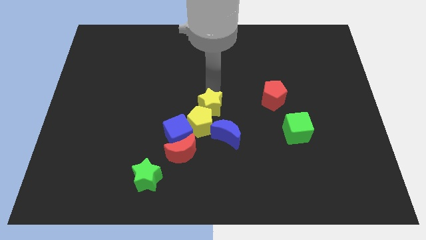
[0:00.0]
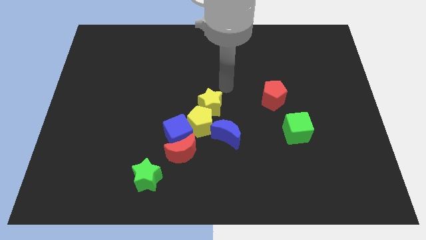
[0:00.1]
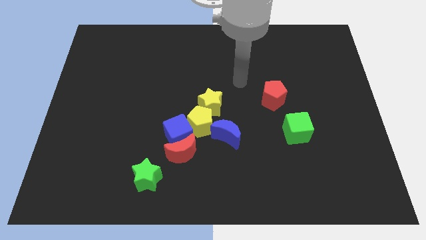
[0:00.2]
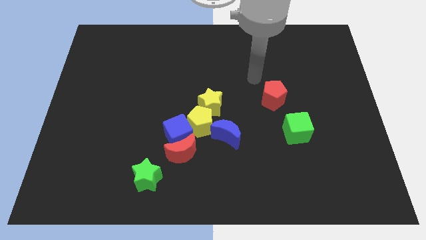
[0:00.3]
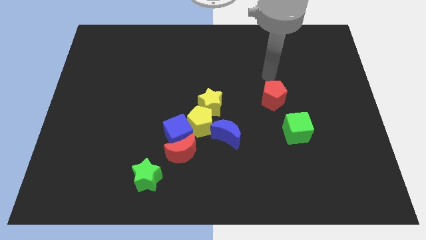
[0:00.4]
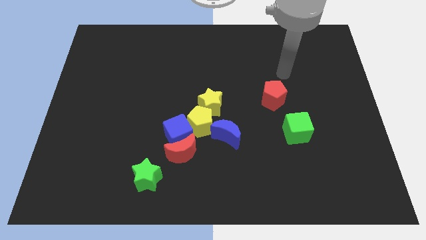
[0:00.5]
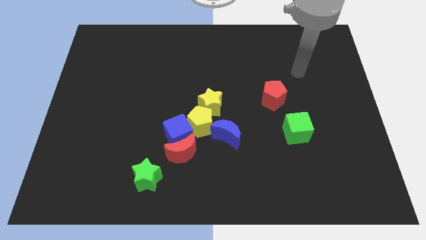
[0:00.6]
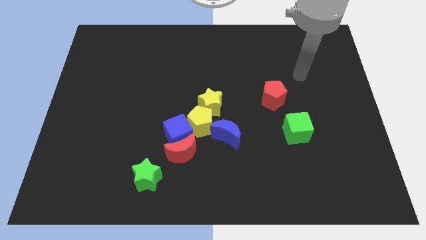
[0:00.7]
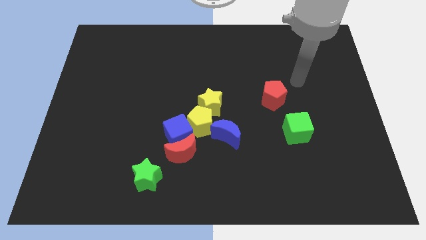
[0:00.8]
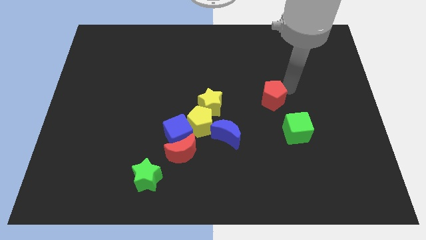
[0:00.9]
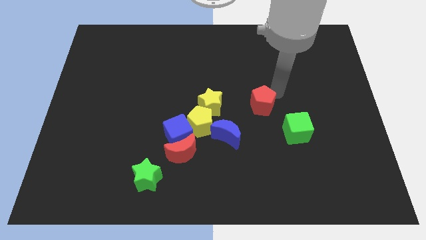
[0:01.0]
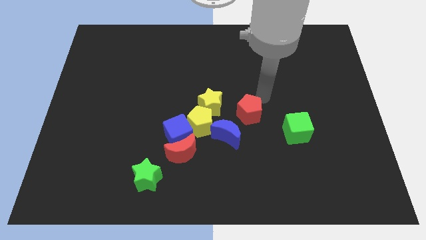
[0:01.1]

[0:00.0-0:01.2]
push red pentagon to the right of the yellow star

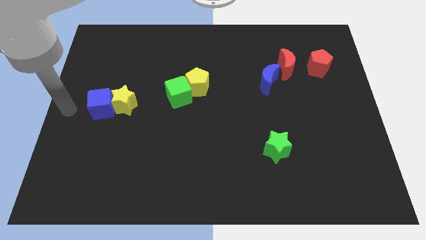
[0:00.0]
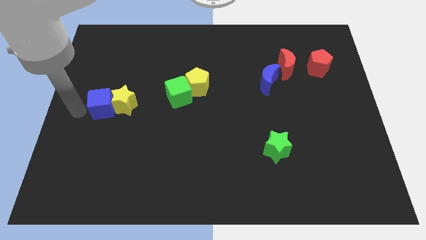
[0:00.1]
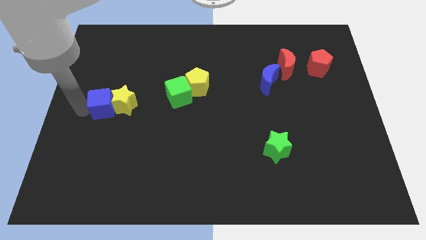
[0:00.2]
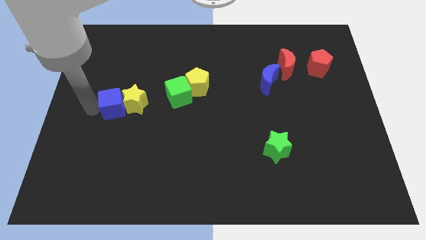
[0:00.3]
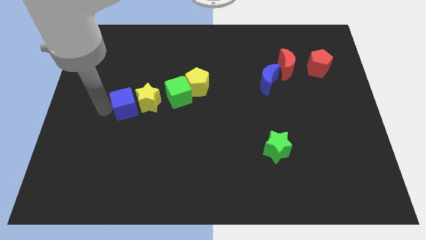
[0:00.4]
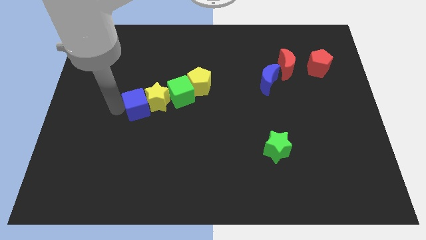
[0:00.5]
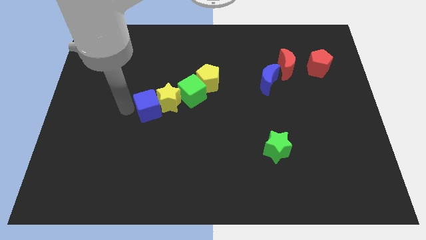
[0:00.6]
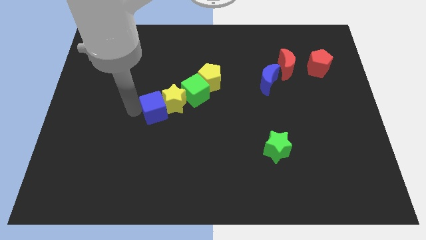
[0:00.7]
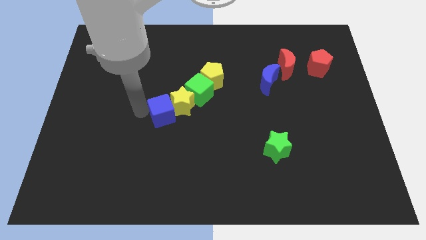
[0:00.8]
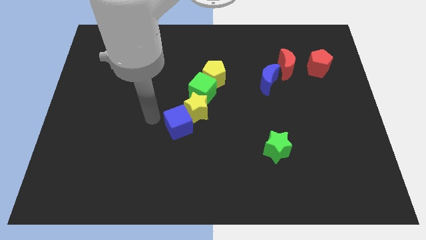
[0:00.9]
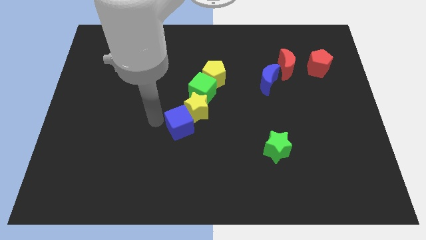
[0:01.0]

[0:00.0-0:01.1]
push the yellow blocks blue and green cubes towards the center of the board

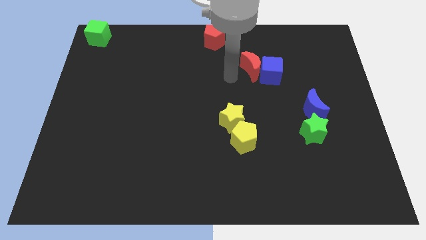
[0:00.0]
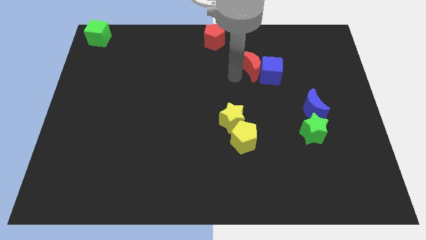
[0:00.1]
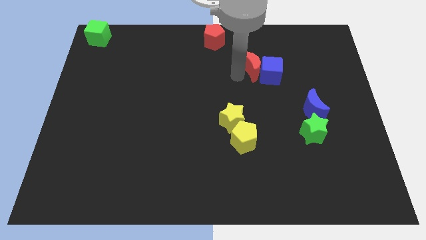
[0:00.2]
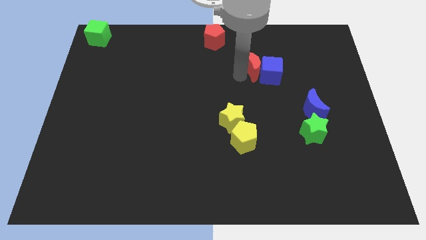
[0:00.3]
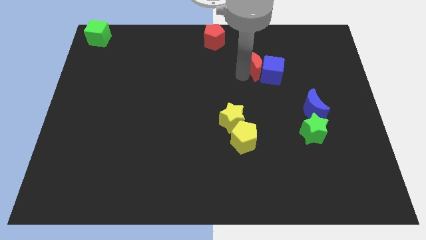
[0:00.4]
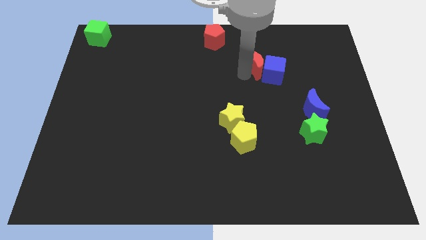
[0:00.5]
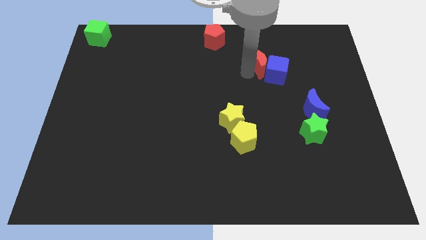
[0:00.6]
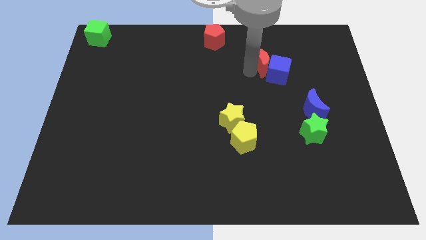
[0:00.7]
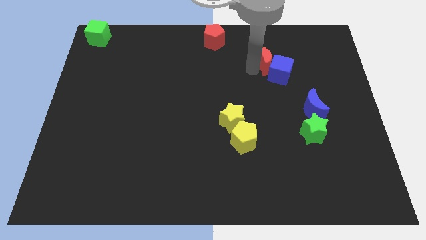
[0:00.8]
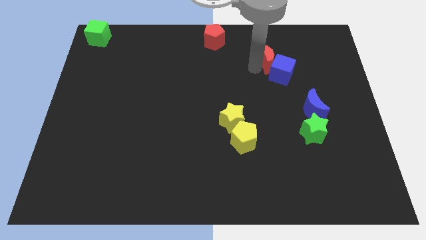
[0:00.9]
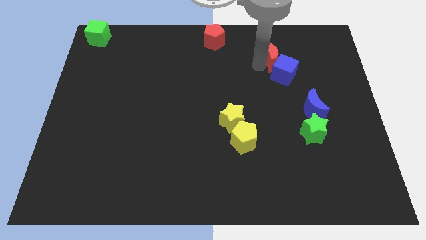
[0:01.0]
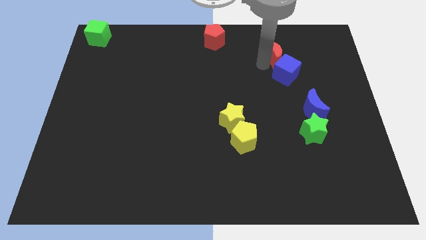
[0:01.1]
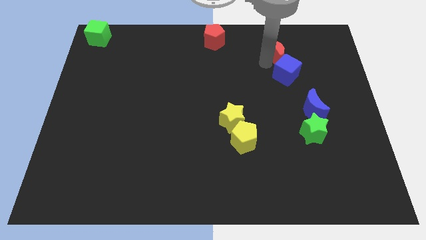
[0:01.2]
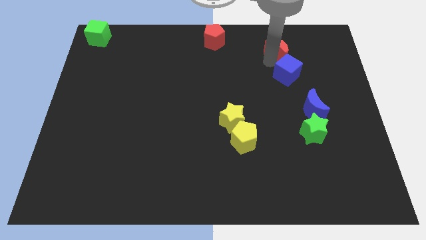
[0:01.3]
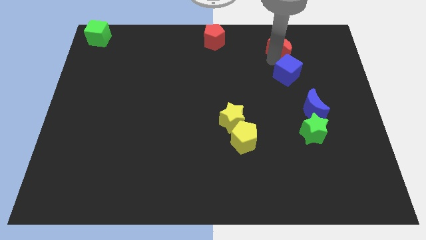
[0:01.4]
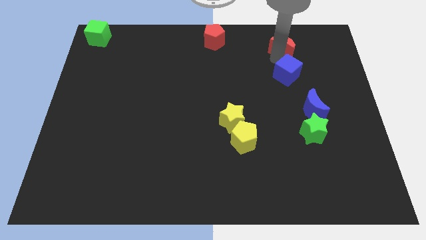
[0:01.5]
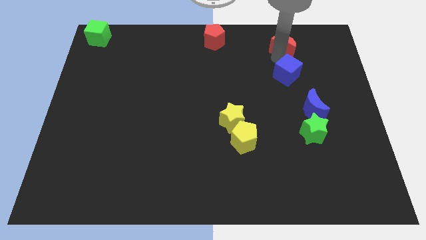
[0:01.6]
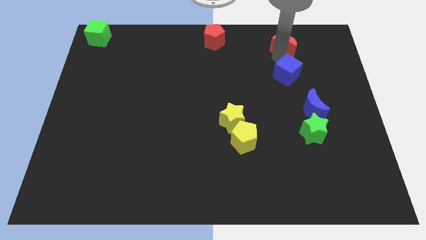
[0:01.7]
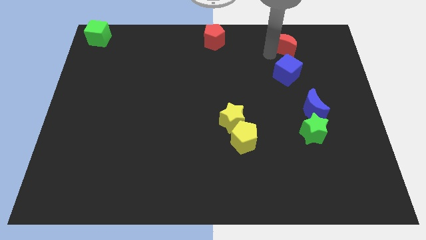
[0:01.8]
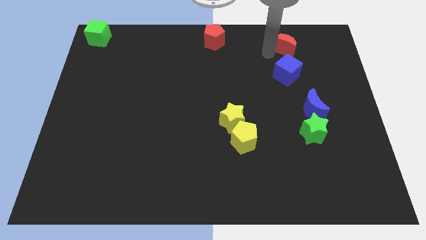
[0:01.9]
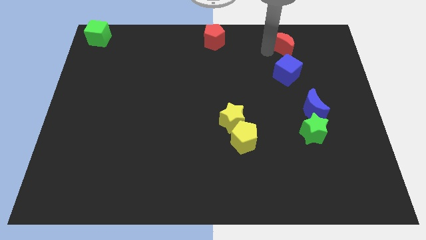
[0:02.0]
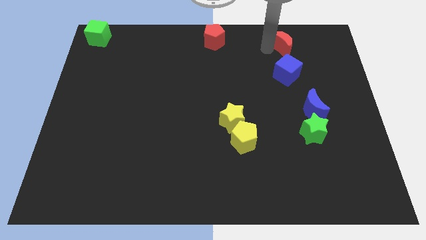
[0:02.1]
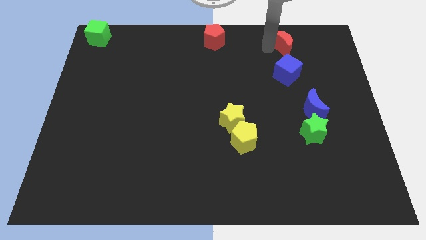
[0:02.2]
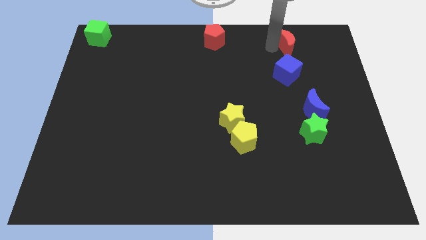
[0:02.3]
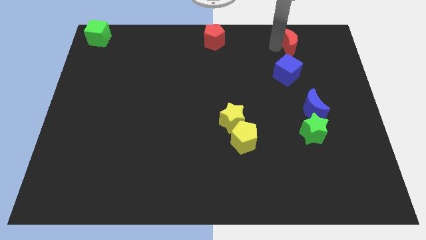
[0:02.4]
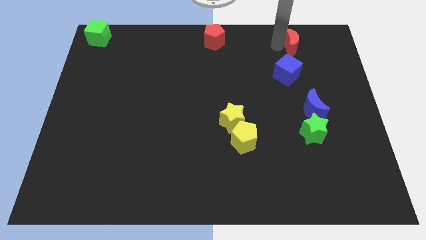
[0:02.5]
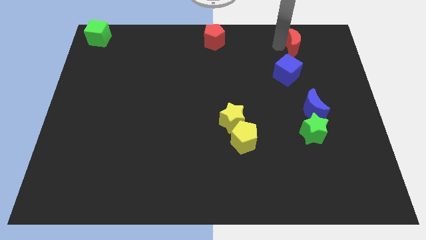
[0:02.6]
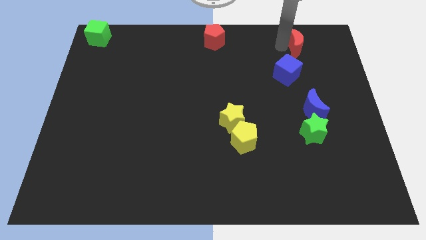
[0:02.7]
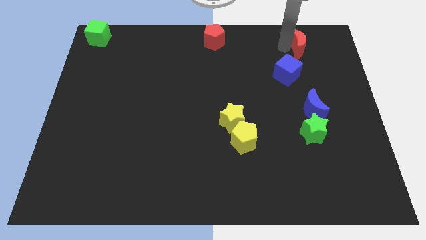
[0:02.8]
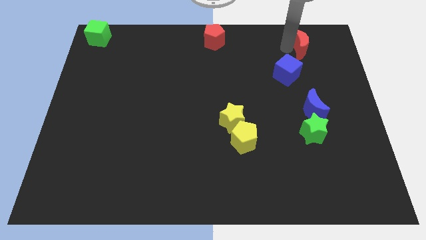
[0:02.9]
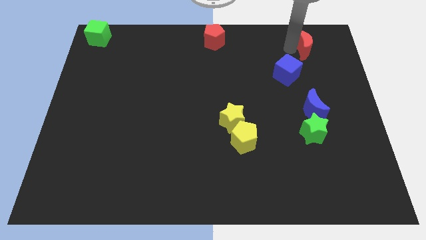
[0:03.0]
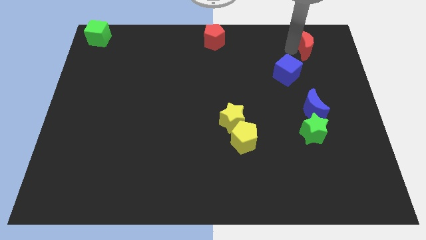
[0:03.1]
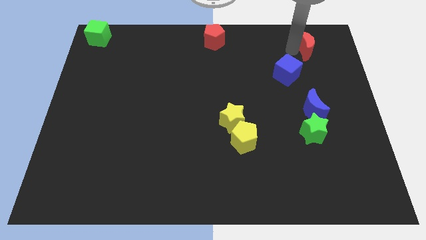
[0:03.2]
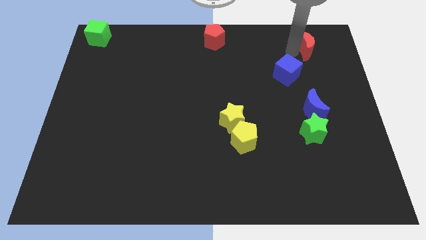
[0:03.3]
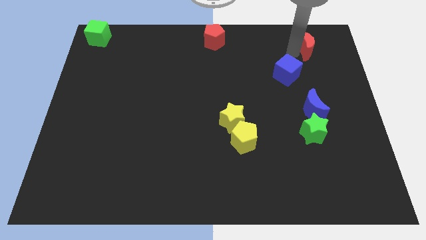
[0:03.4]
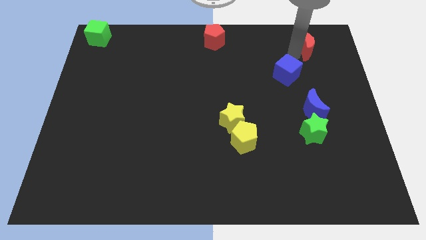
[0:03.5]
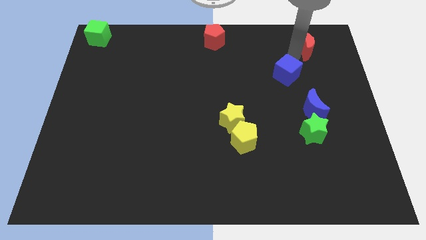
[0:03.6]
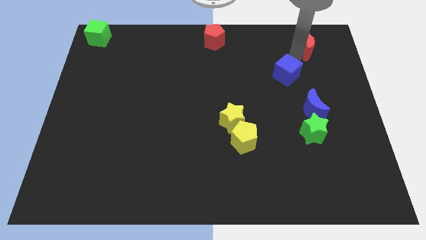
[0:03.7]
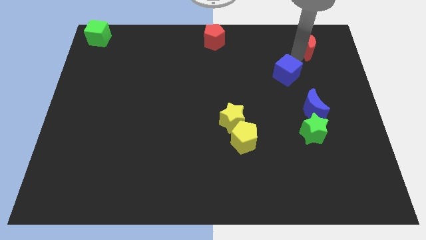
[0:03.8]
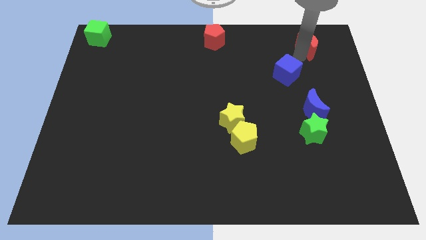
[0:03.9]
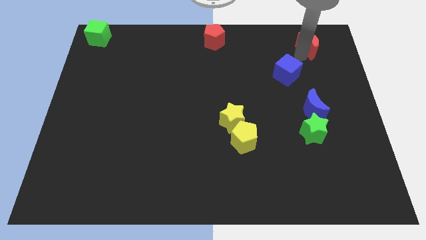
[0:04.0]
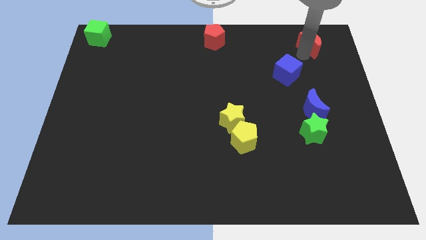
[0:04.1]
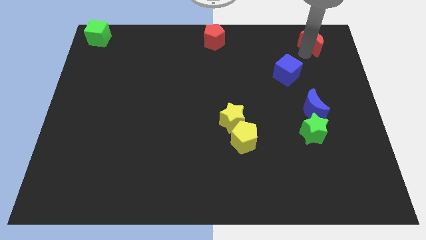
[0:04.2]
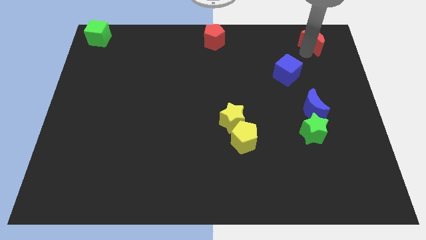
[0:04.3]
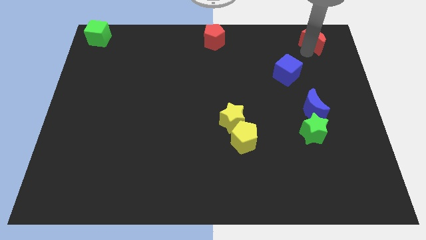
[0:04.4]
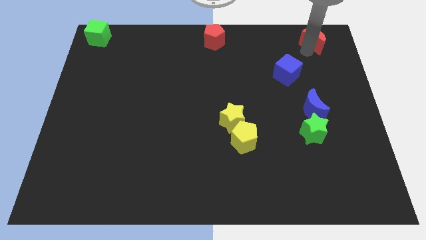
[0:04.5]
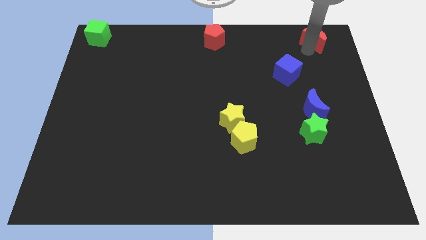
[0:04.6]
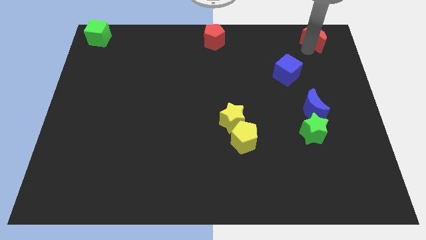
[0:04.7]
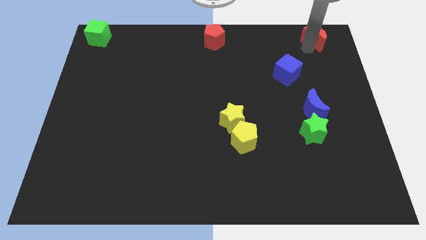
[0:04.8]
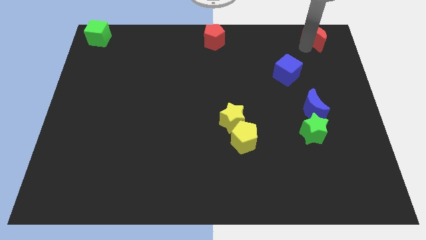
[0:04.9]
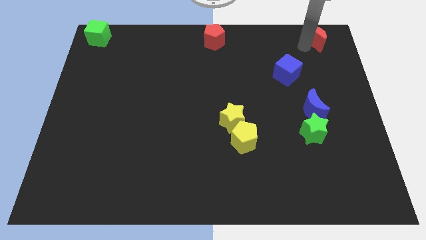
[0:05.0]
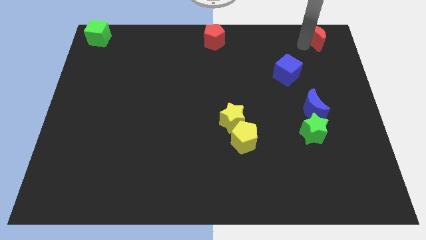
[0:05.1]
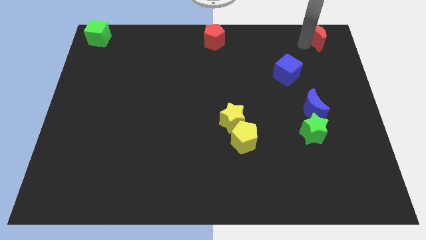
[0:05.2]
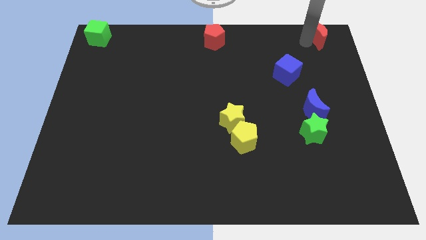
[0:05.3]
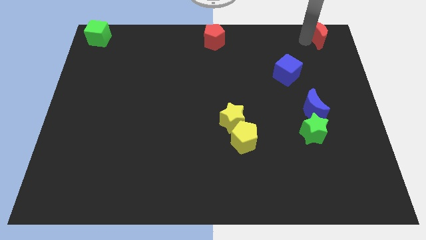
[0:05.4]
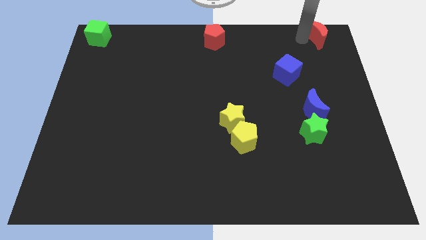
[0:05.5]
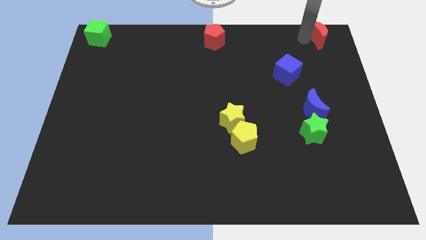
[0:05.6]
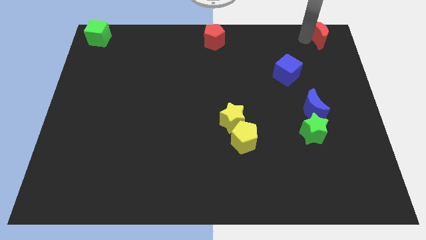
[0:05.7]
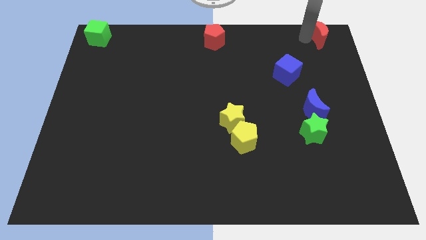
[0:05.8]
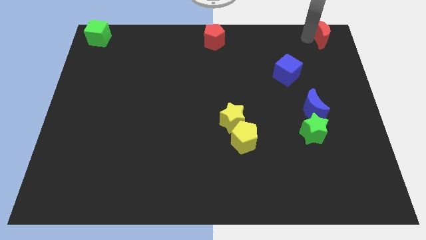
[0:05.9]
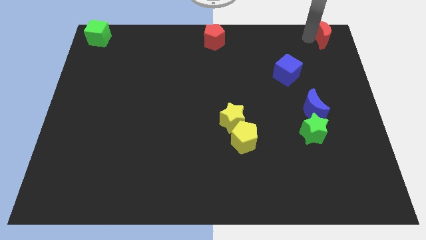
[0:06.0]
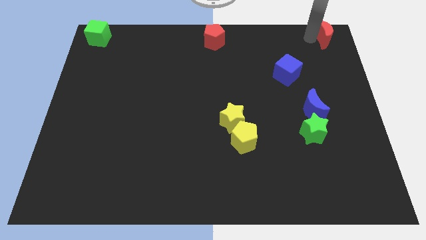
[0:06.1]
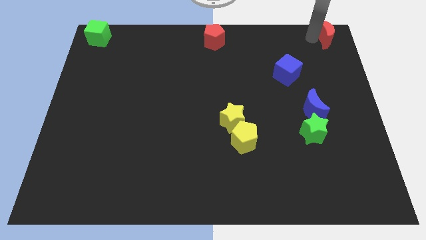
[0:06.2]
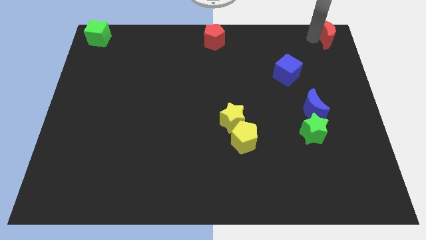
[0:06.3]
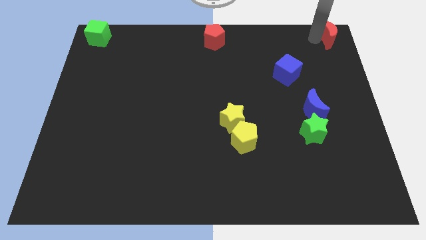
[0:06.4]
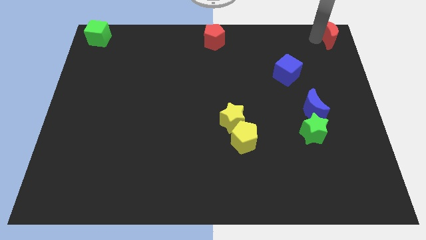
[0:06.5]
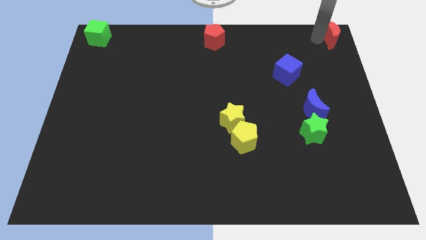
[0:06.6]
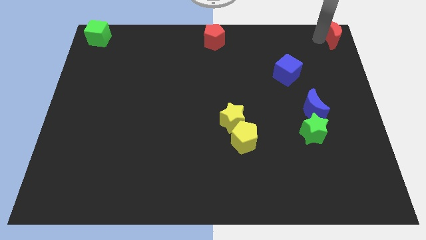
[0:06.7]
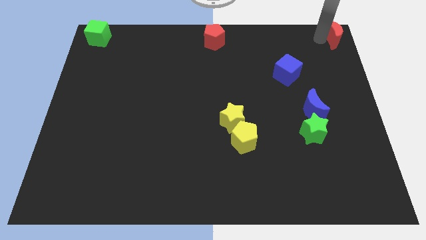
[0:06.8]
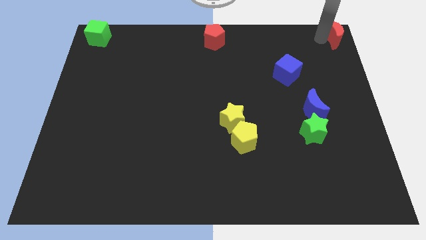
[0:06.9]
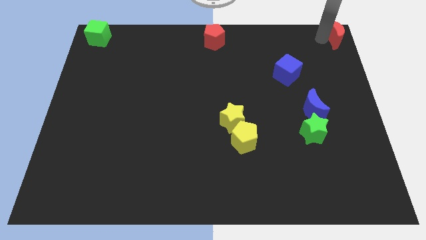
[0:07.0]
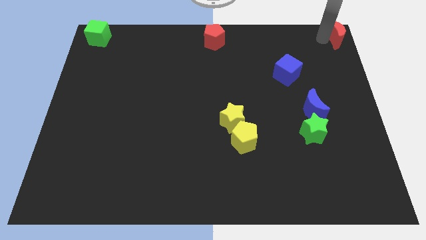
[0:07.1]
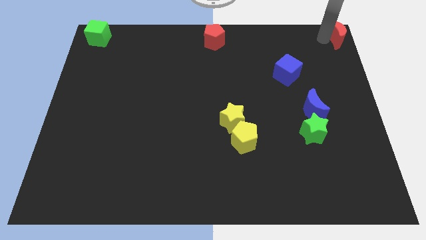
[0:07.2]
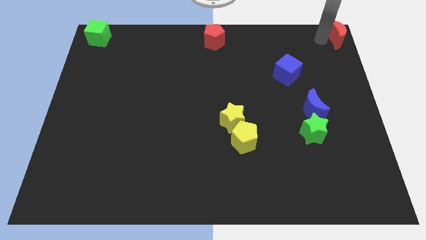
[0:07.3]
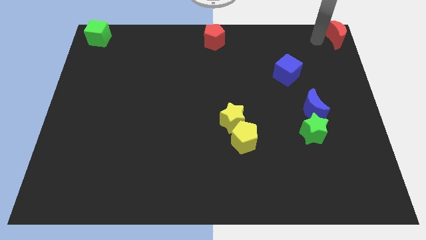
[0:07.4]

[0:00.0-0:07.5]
move the red crescent to the top right corner of the board
